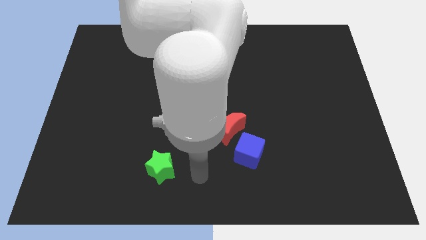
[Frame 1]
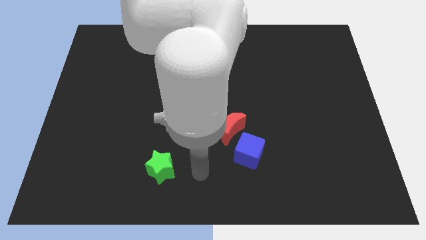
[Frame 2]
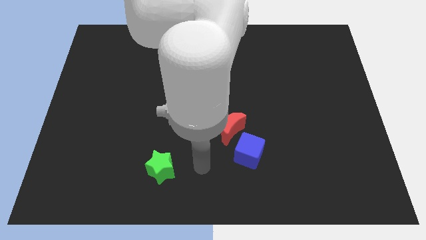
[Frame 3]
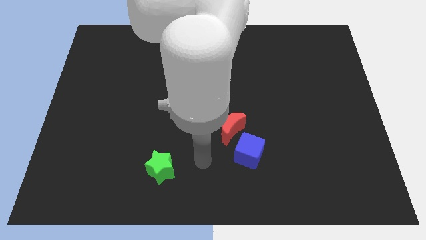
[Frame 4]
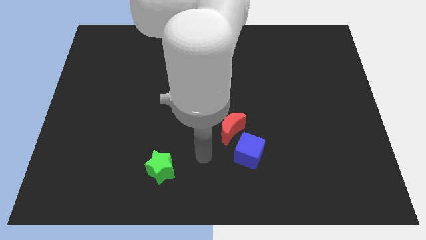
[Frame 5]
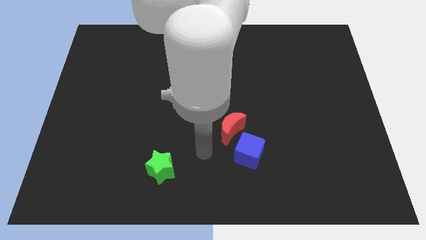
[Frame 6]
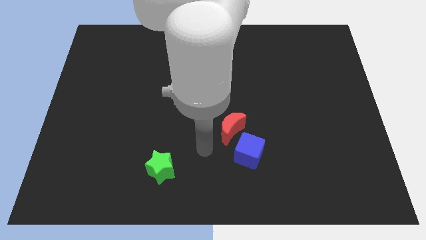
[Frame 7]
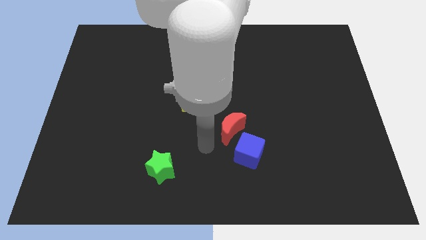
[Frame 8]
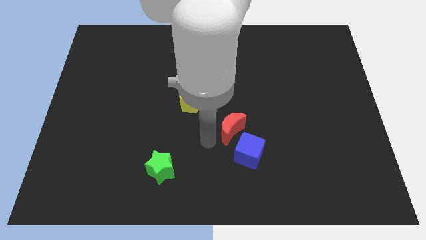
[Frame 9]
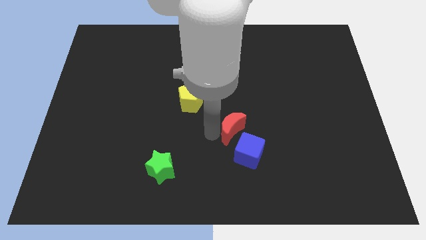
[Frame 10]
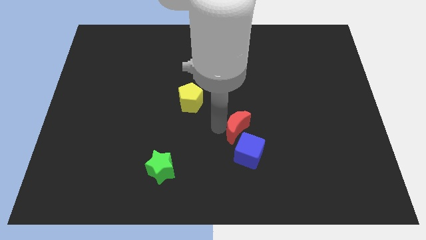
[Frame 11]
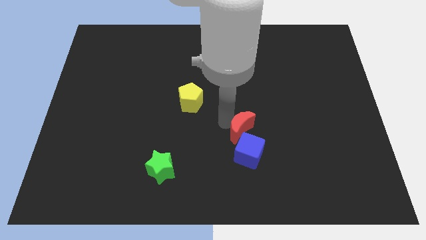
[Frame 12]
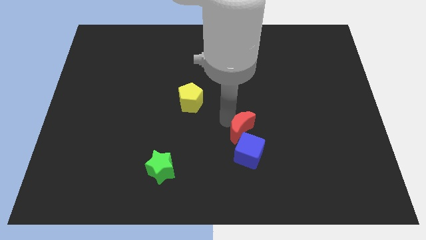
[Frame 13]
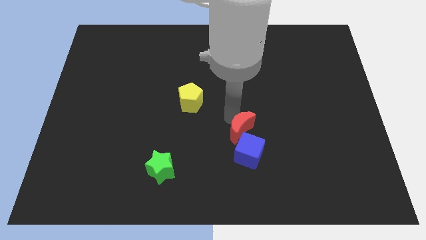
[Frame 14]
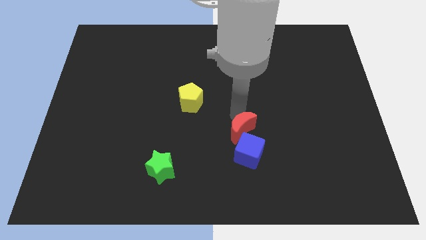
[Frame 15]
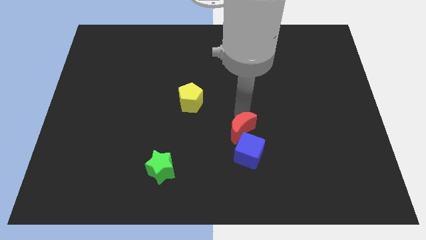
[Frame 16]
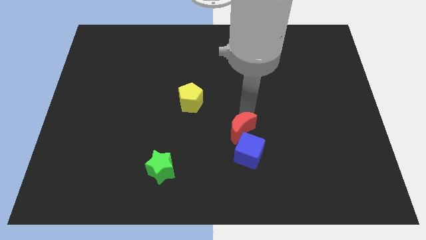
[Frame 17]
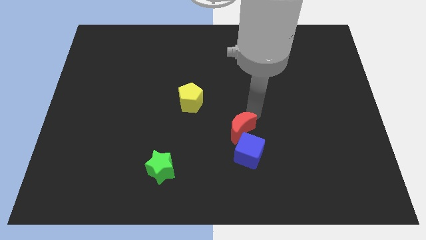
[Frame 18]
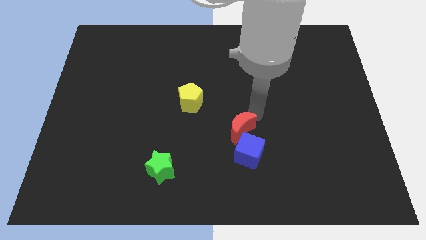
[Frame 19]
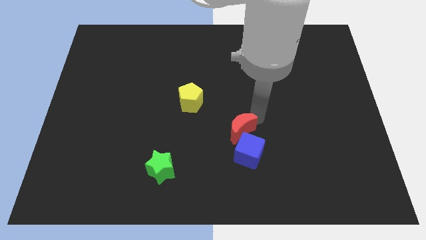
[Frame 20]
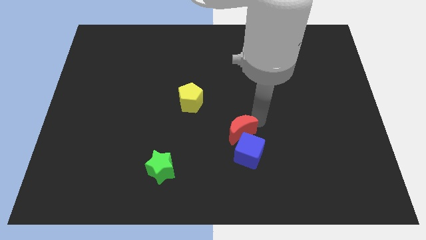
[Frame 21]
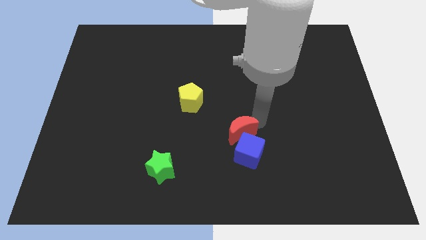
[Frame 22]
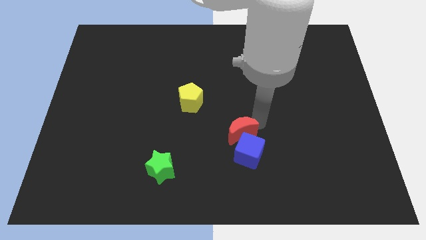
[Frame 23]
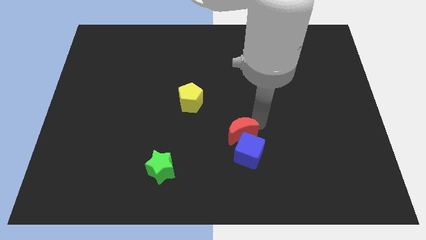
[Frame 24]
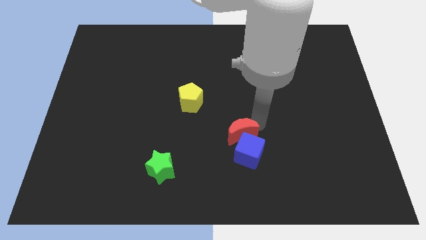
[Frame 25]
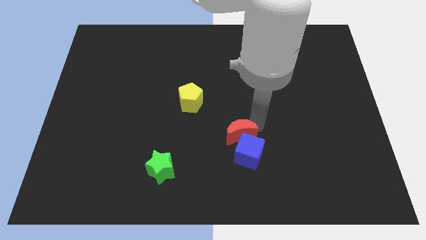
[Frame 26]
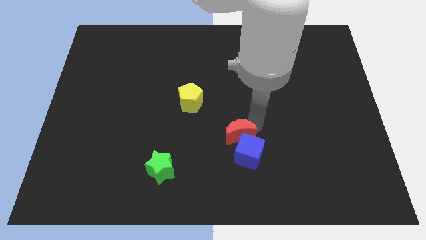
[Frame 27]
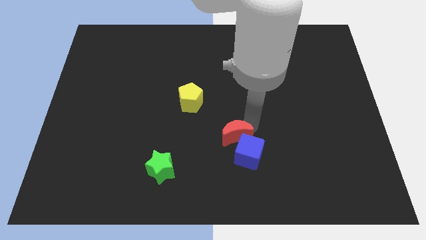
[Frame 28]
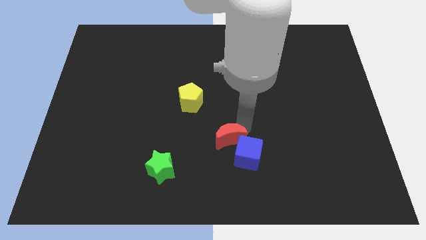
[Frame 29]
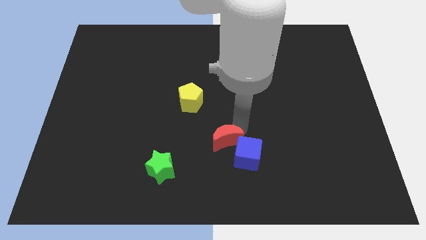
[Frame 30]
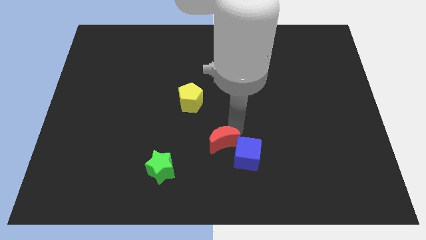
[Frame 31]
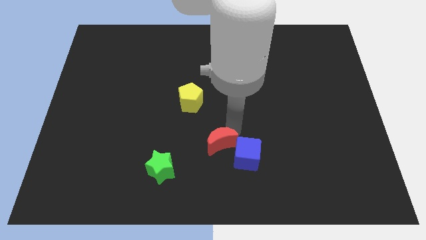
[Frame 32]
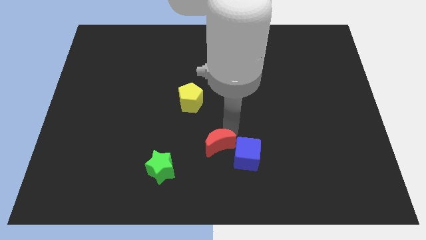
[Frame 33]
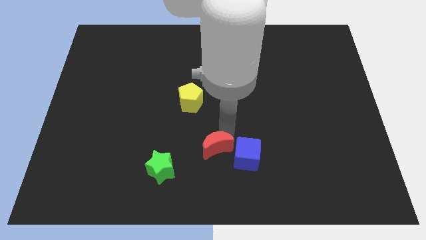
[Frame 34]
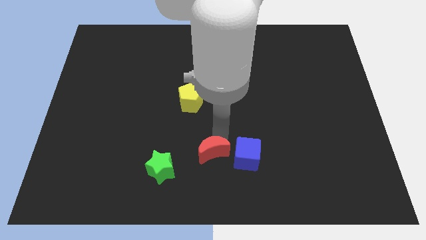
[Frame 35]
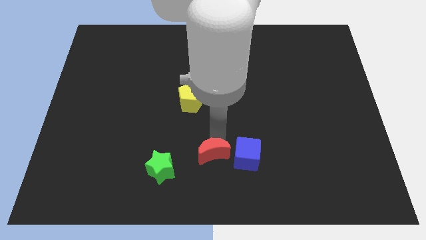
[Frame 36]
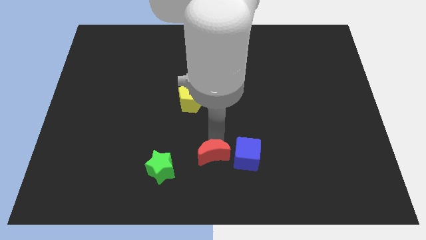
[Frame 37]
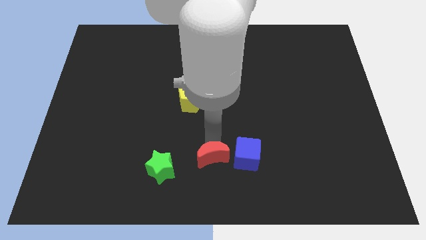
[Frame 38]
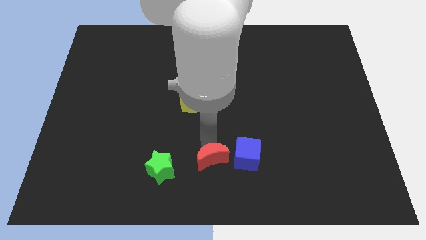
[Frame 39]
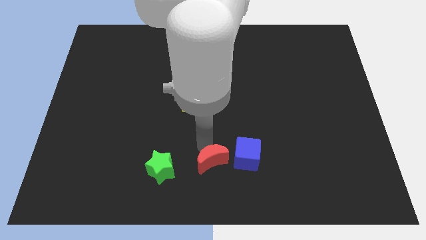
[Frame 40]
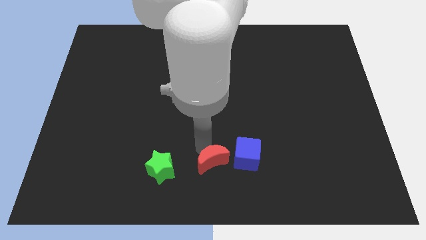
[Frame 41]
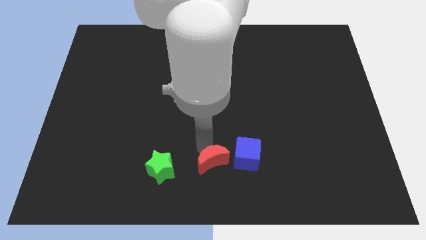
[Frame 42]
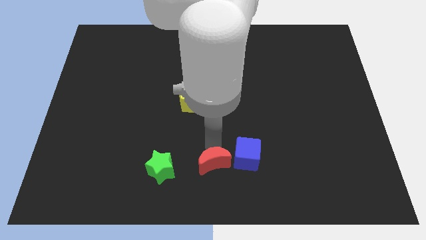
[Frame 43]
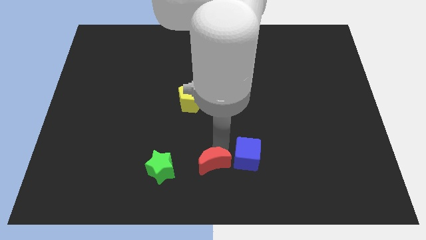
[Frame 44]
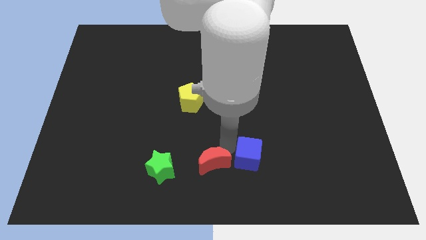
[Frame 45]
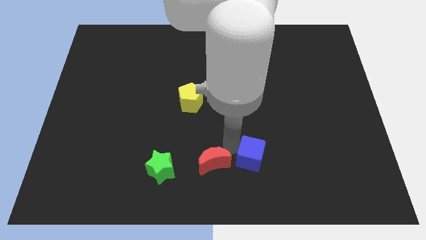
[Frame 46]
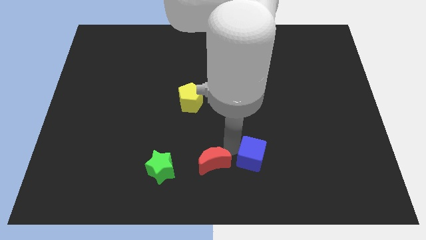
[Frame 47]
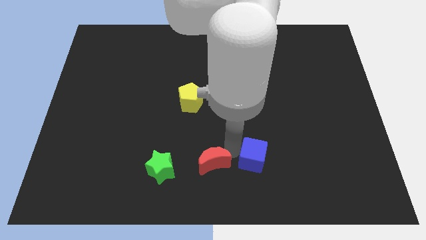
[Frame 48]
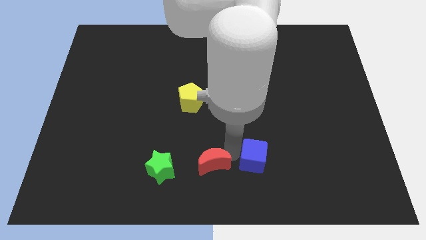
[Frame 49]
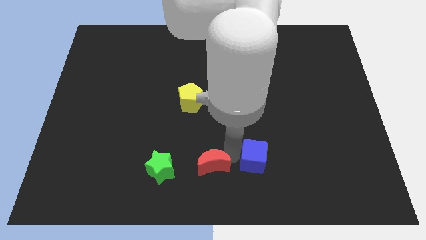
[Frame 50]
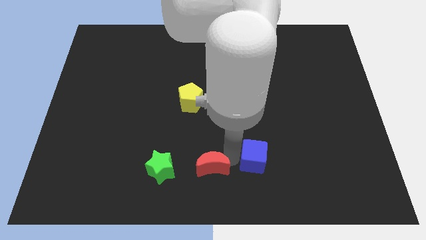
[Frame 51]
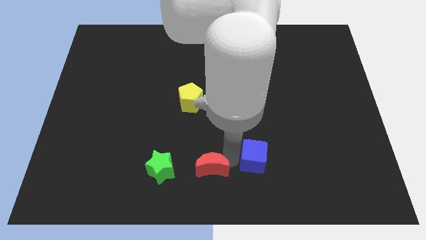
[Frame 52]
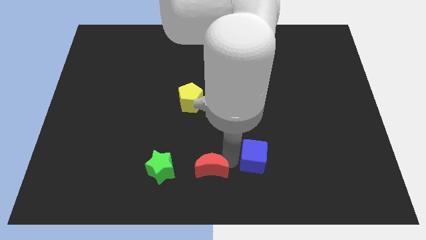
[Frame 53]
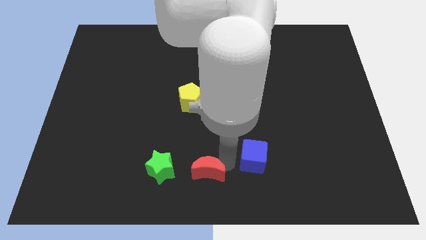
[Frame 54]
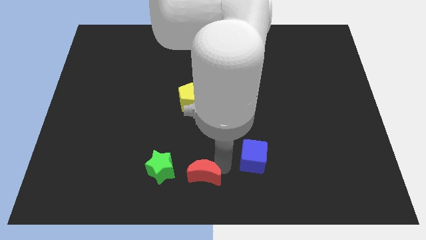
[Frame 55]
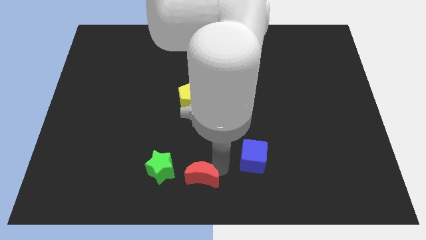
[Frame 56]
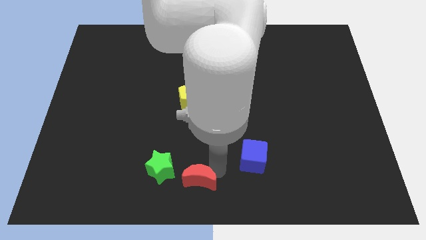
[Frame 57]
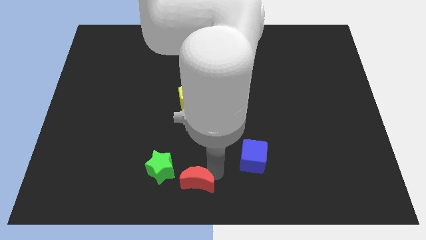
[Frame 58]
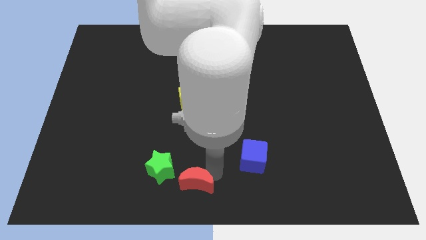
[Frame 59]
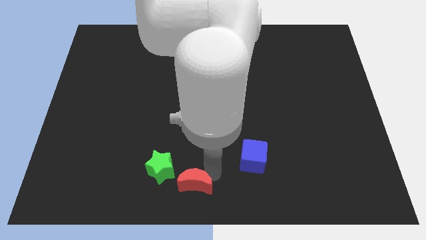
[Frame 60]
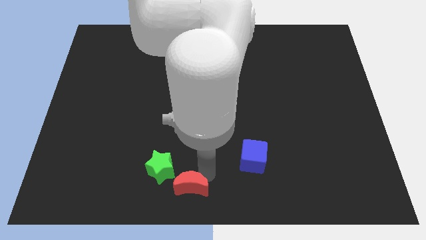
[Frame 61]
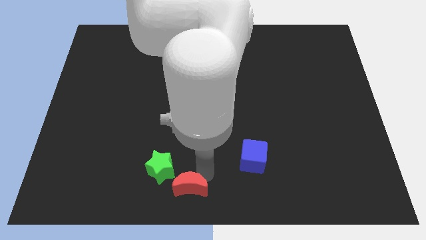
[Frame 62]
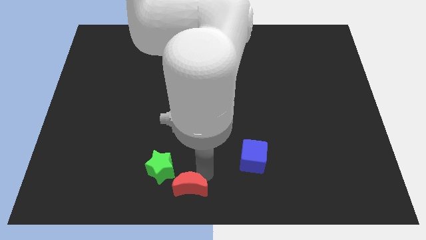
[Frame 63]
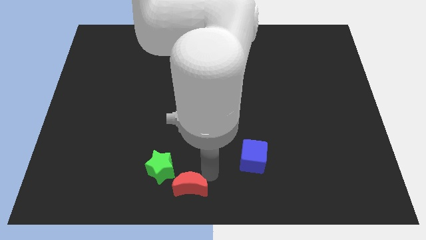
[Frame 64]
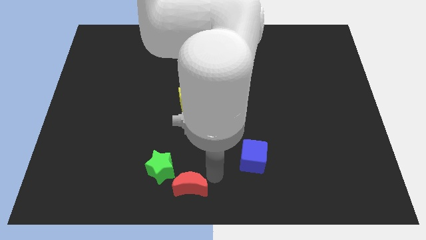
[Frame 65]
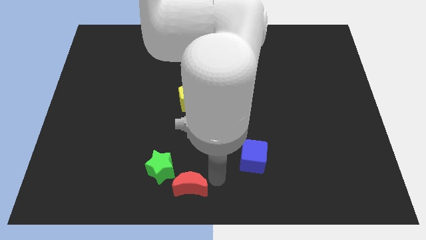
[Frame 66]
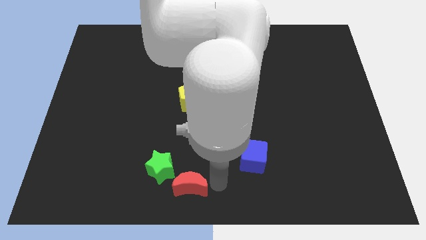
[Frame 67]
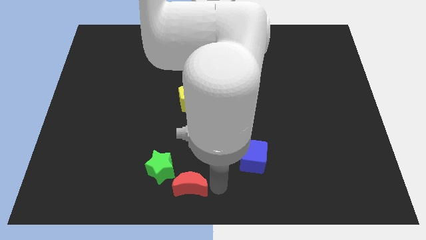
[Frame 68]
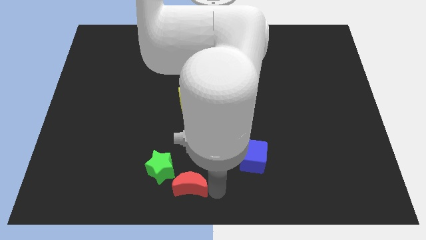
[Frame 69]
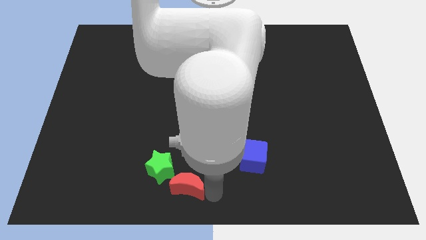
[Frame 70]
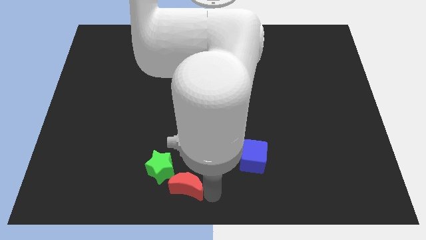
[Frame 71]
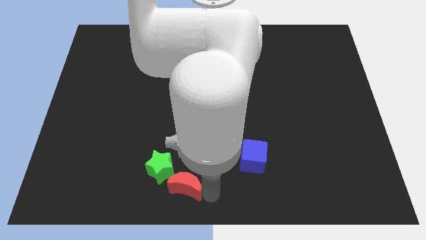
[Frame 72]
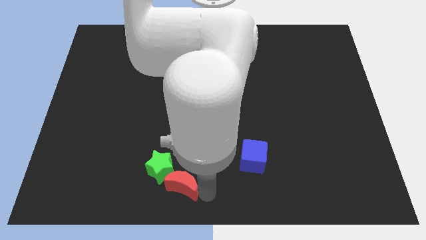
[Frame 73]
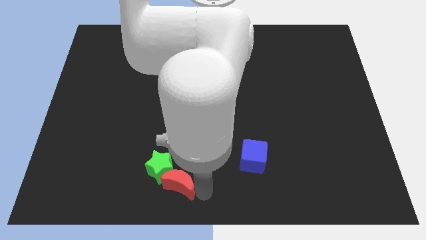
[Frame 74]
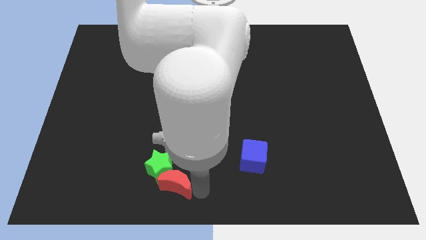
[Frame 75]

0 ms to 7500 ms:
move the red moon close to the green block

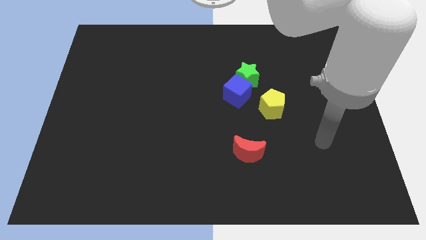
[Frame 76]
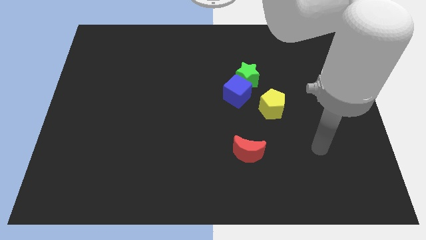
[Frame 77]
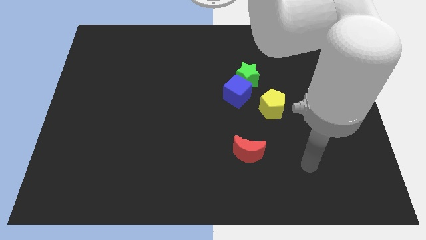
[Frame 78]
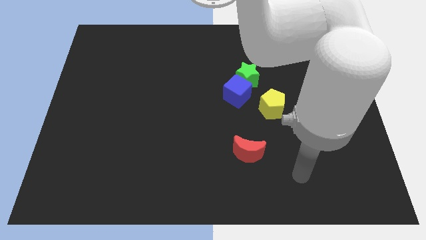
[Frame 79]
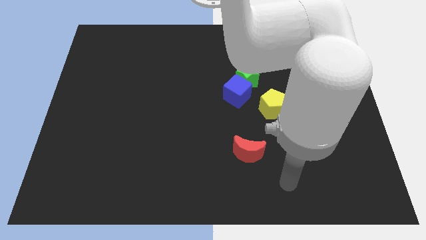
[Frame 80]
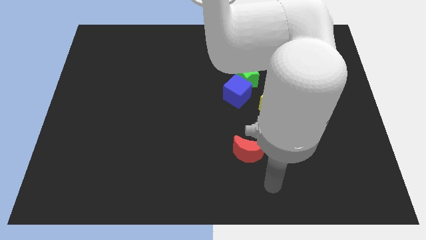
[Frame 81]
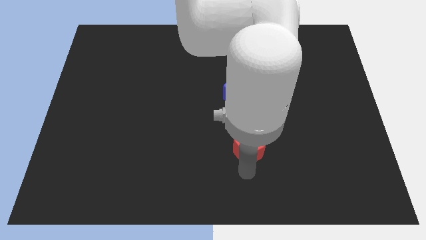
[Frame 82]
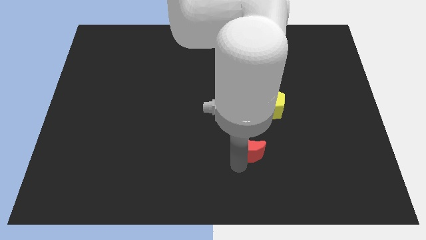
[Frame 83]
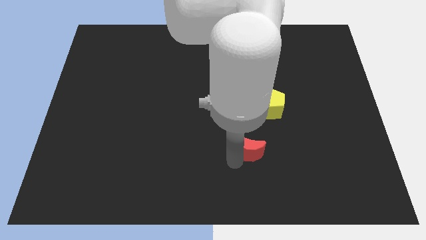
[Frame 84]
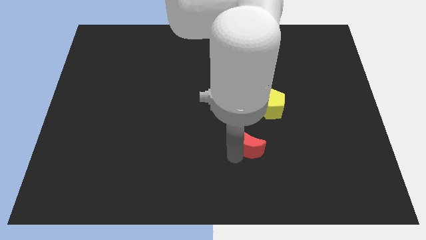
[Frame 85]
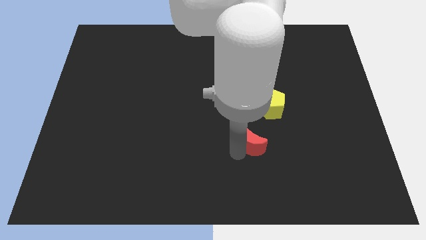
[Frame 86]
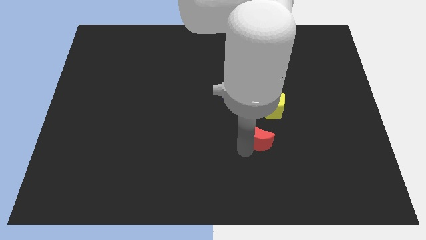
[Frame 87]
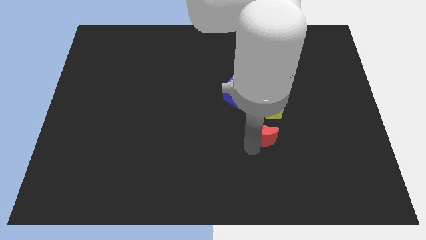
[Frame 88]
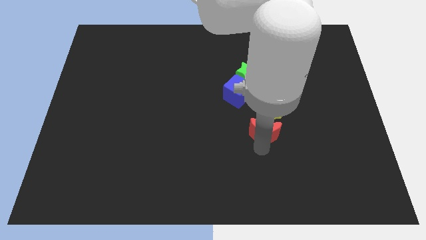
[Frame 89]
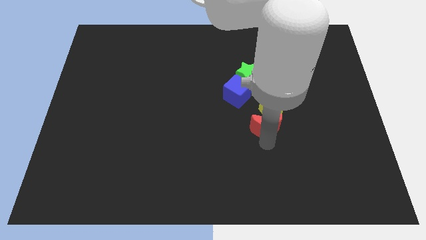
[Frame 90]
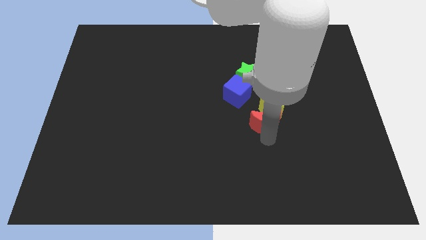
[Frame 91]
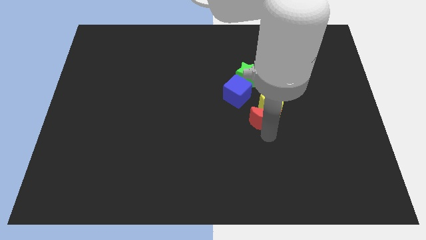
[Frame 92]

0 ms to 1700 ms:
put the red moon next to the yellow block
